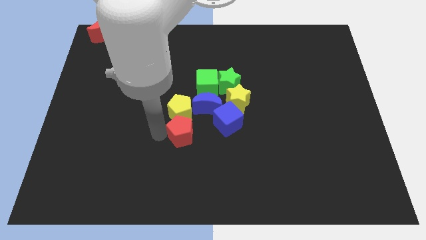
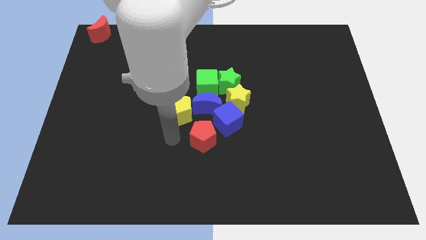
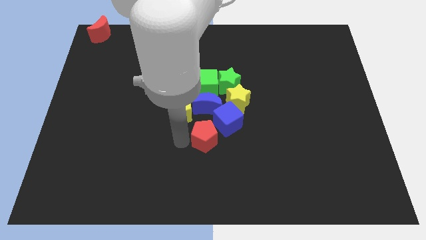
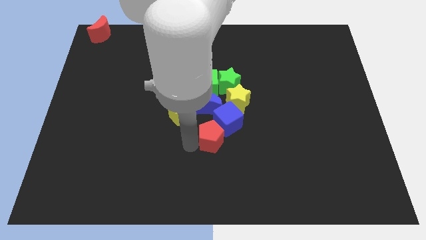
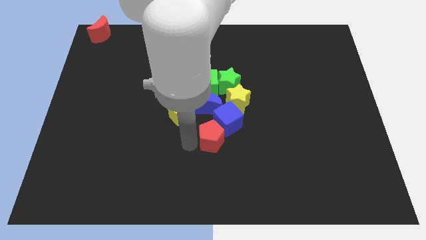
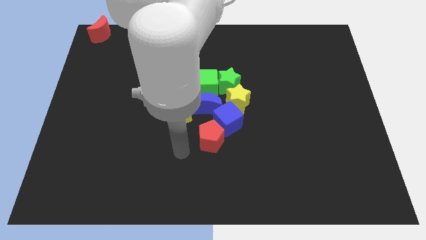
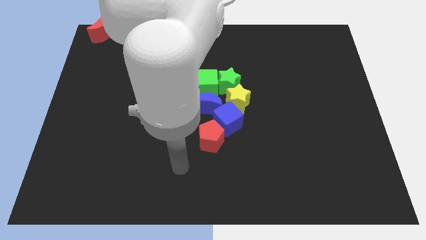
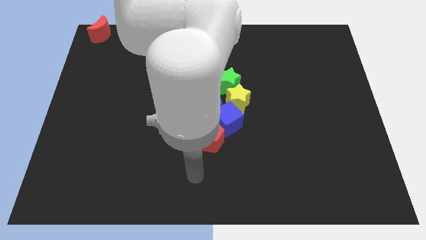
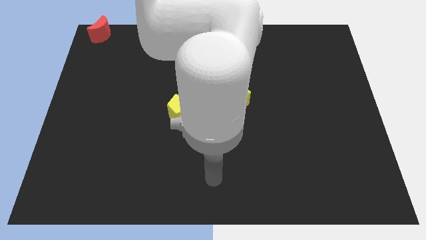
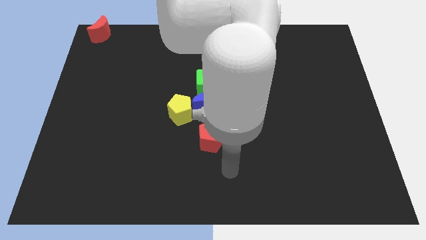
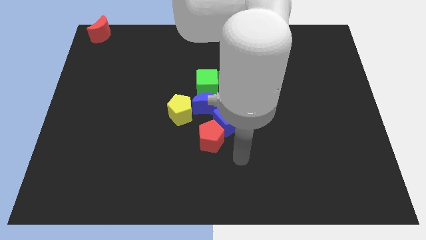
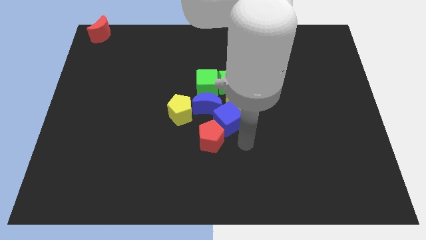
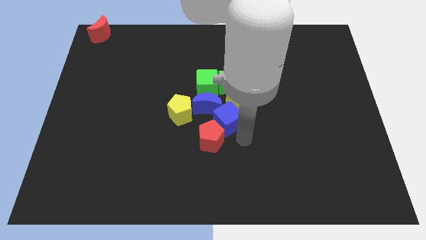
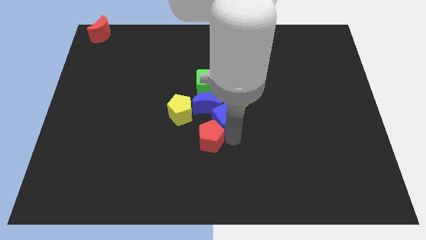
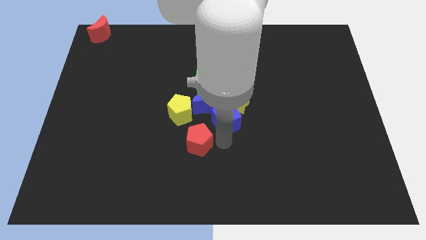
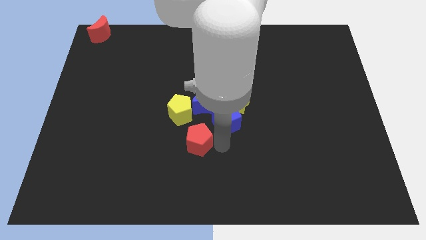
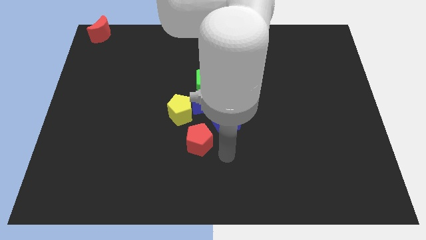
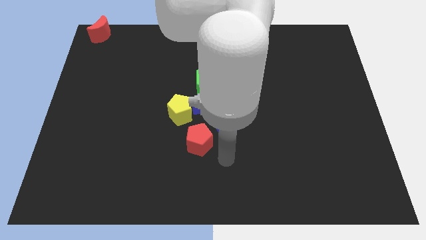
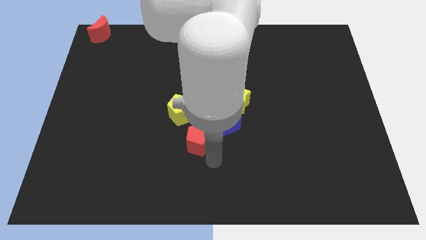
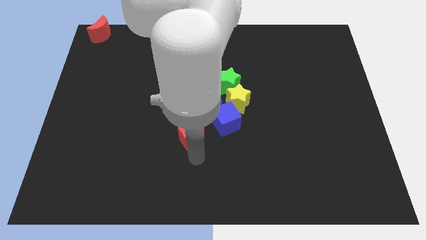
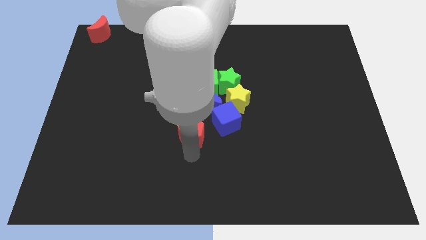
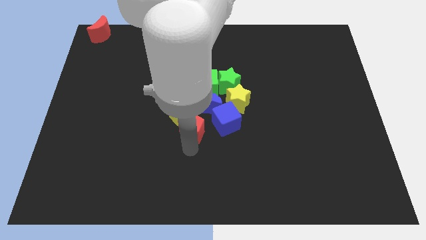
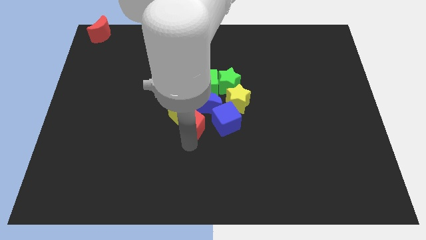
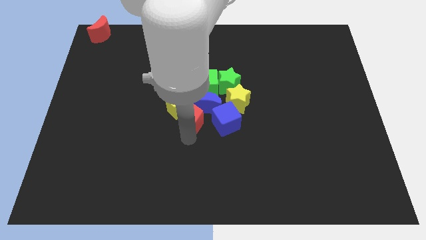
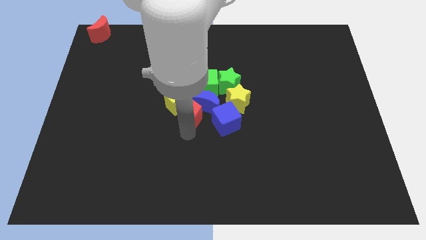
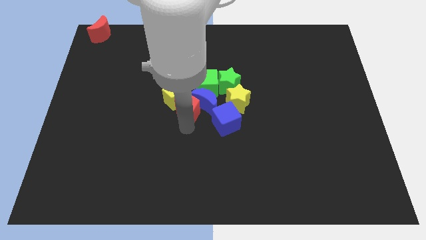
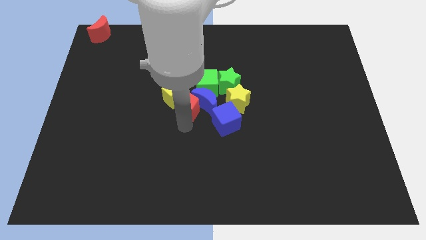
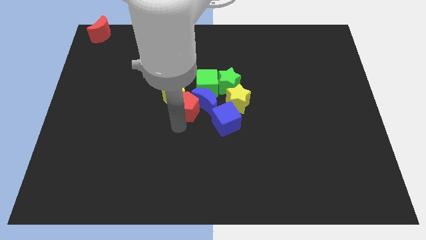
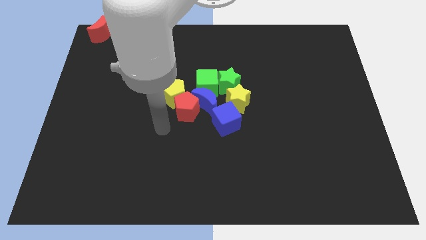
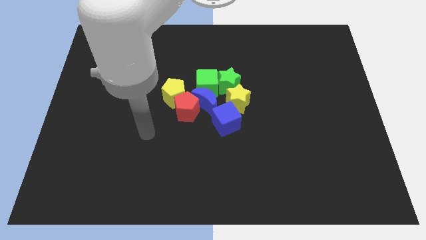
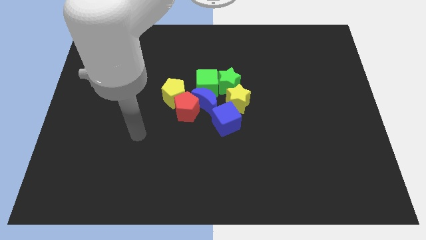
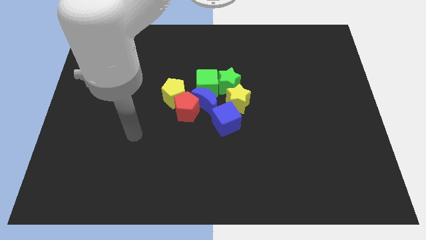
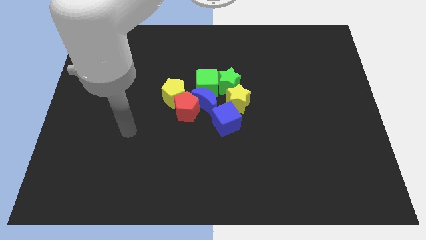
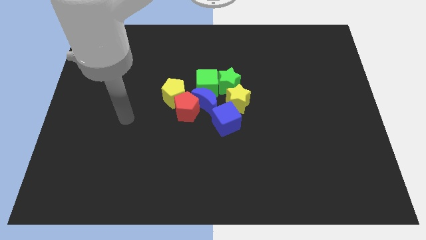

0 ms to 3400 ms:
put the red pentagon into the blue and yellow blocks at the center

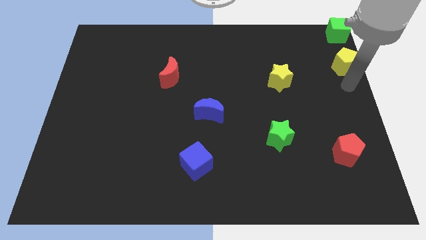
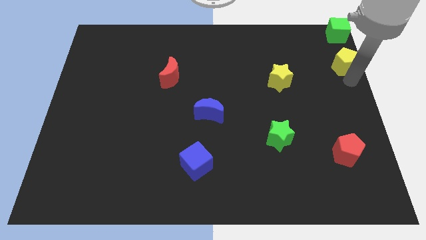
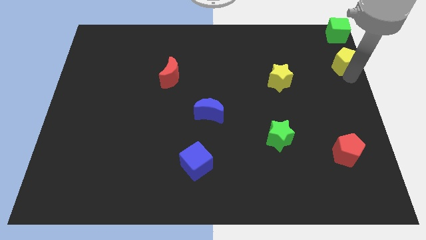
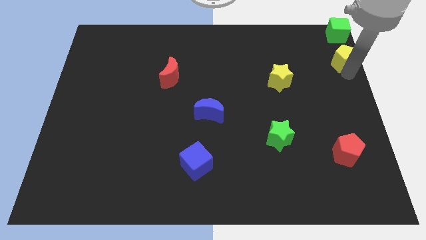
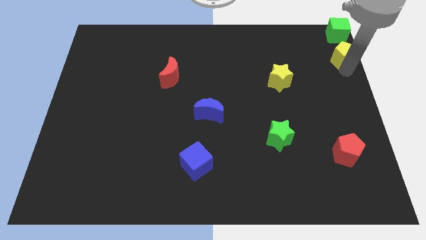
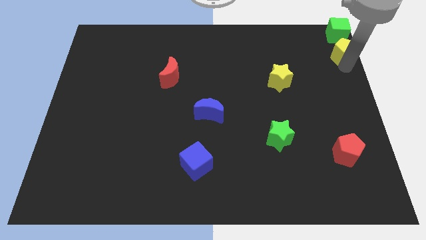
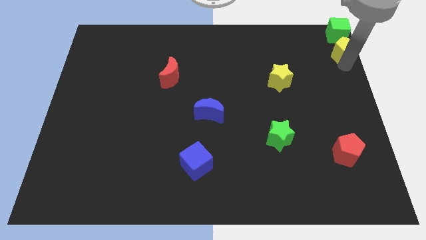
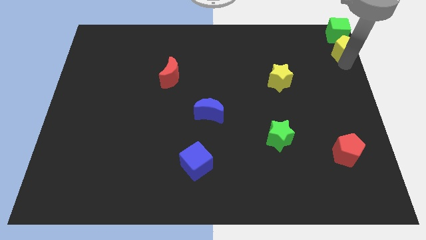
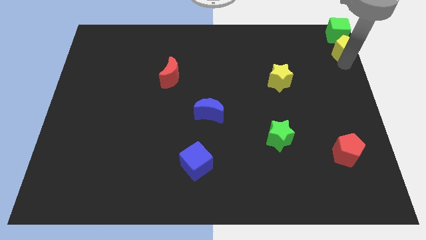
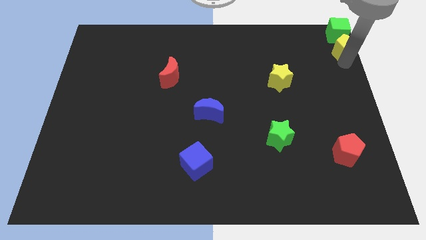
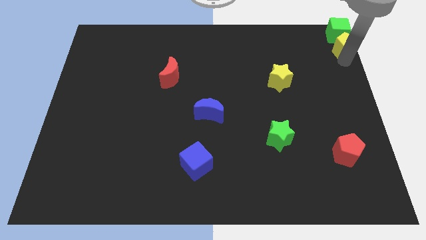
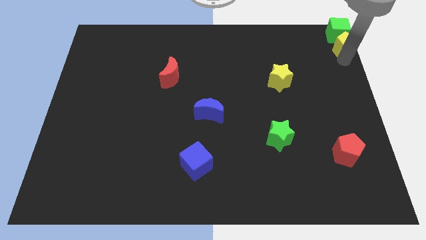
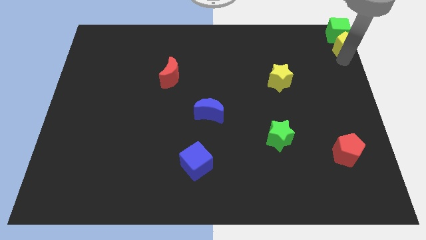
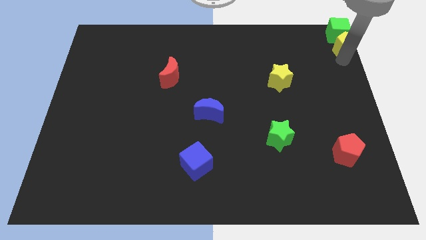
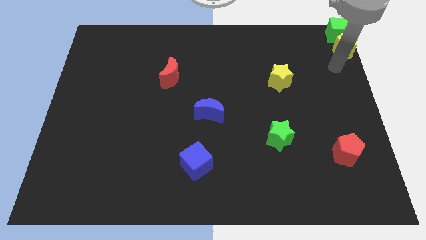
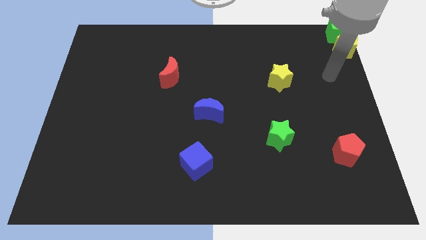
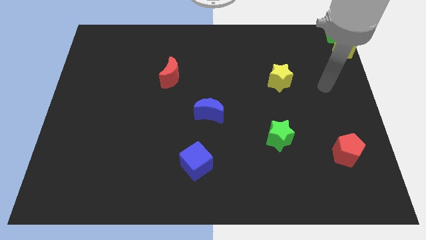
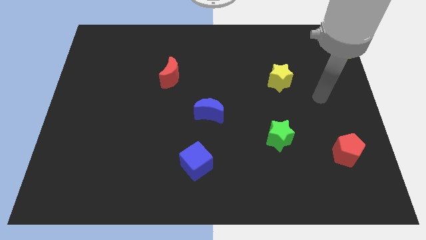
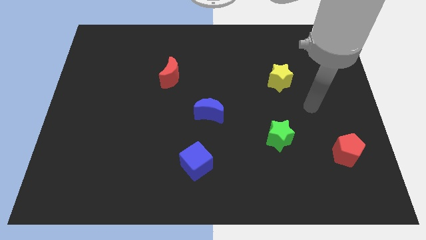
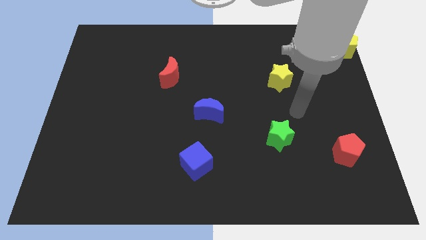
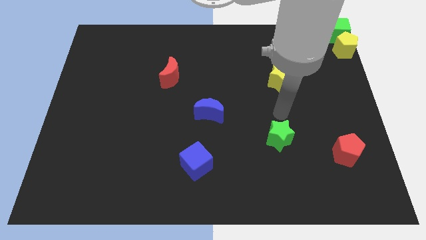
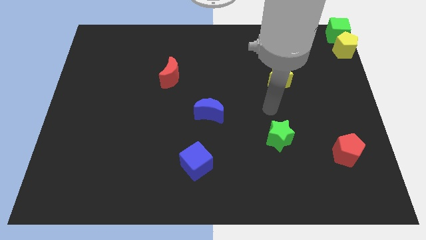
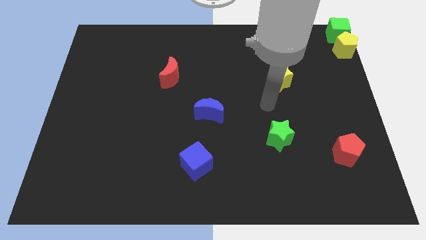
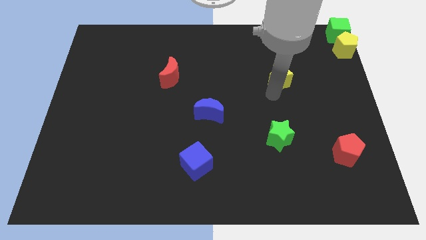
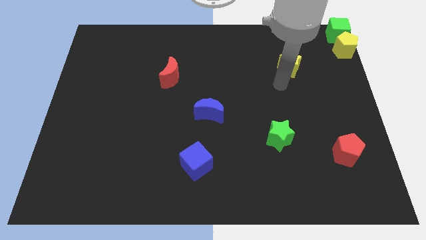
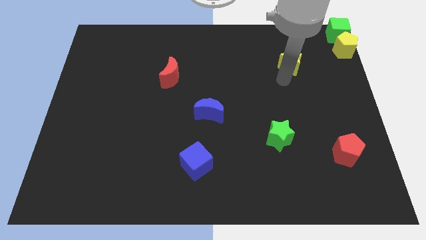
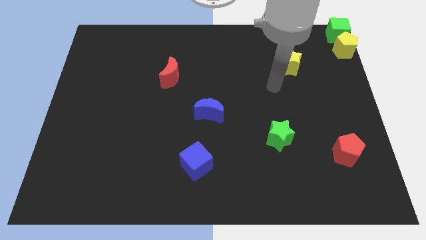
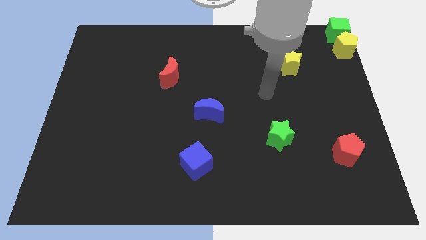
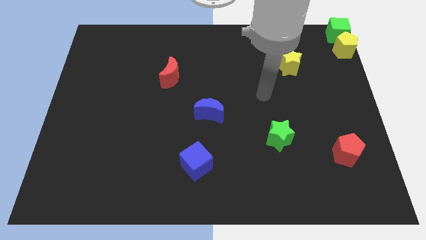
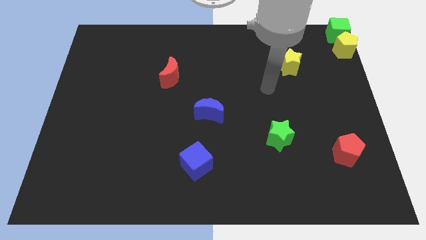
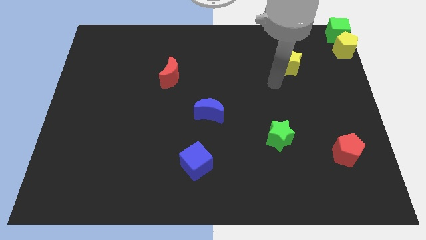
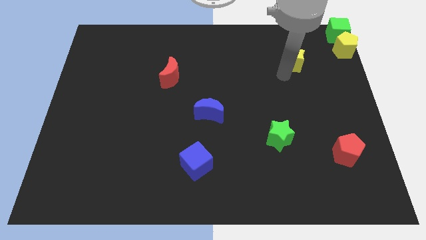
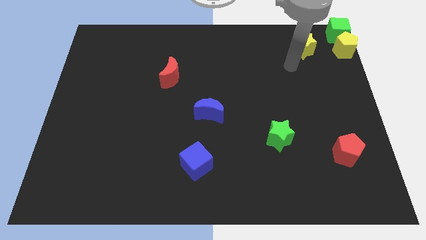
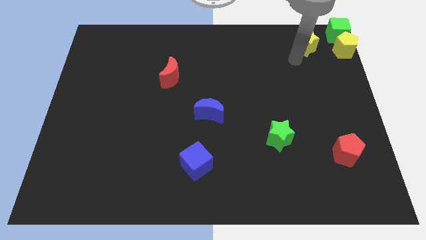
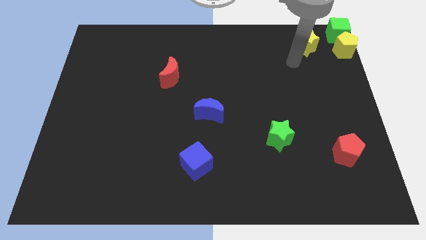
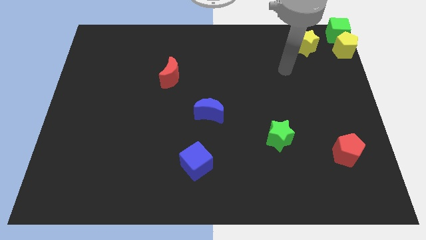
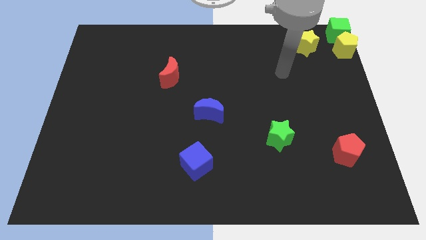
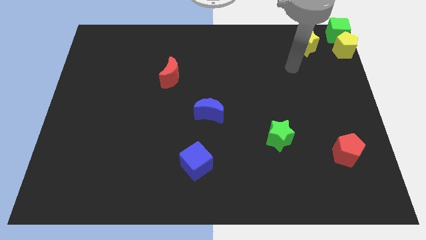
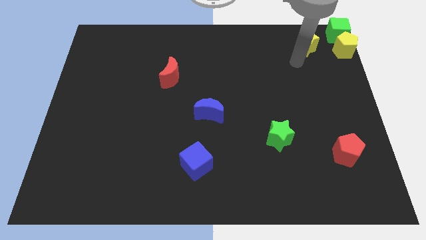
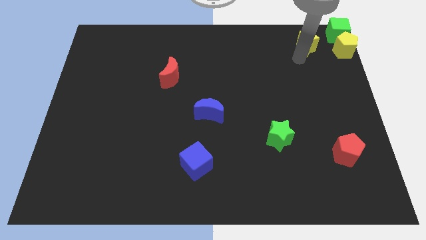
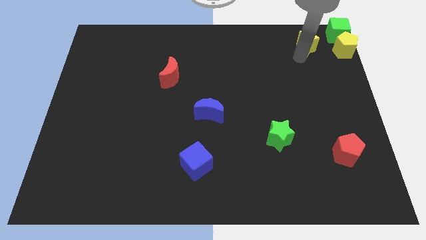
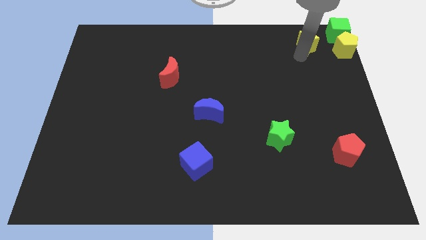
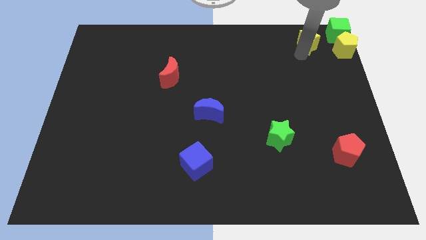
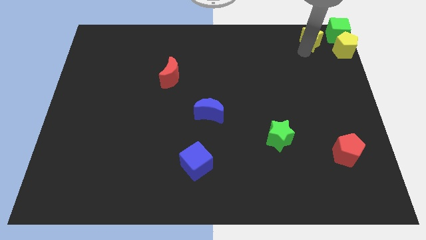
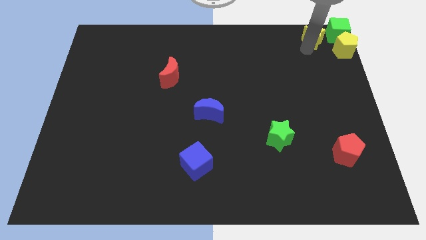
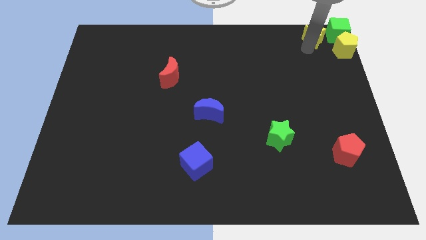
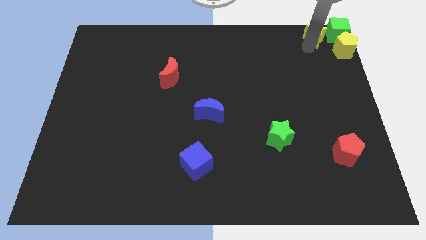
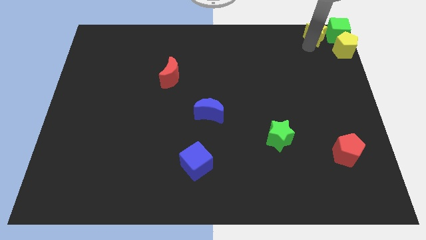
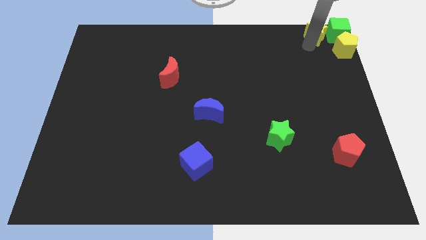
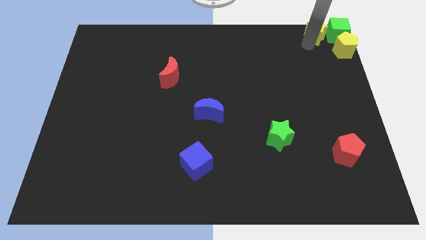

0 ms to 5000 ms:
move the yellow star into the green cube

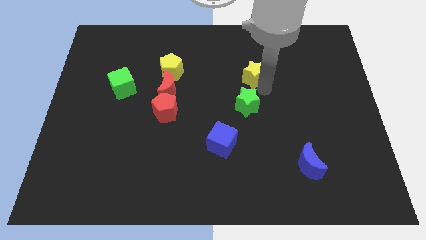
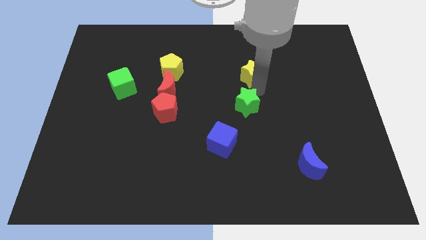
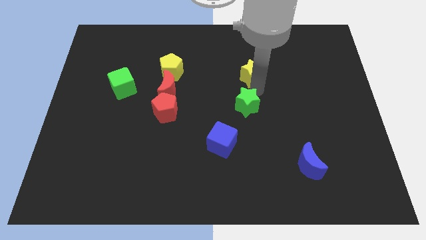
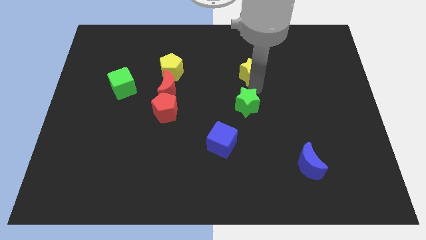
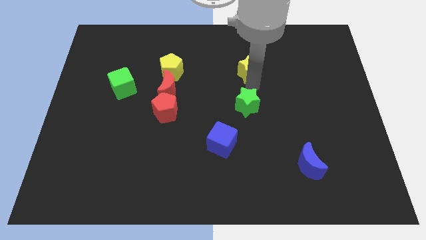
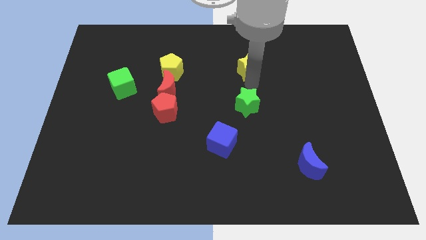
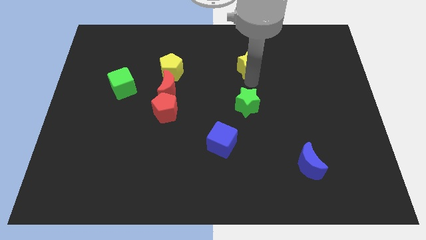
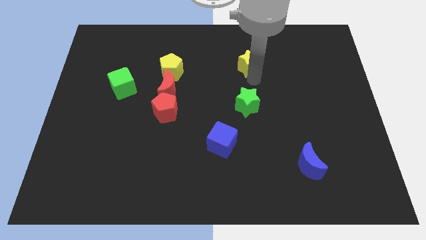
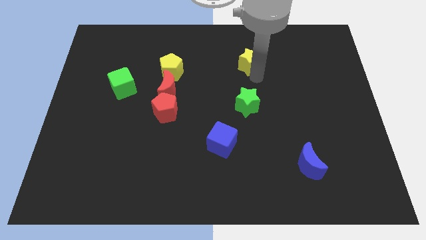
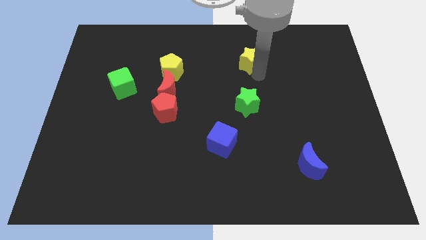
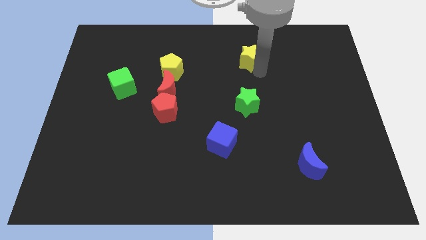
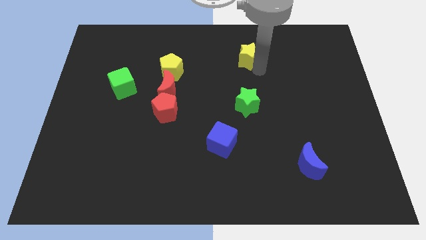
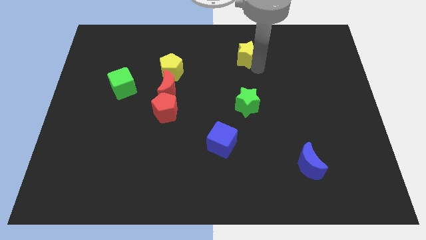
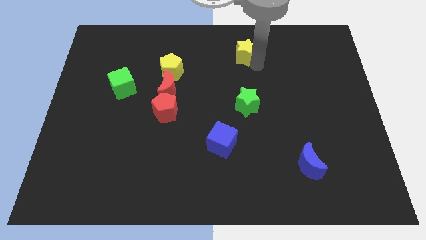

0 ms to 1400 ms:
place the yellow star to the top of the green star
